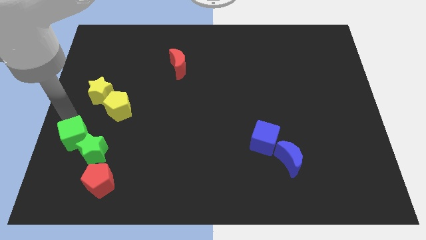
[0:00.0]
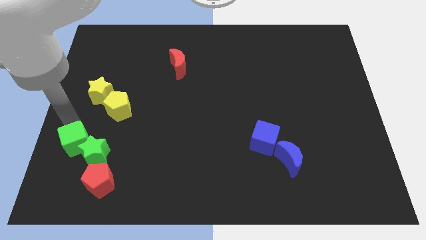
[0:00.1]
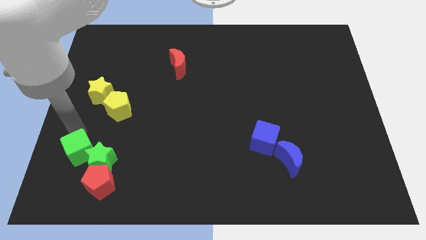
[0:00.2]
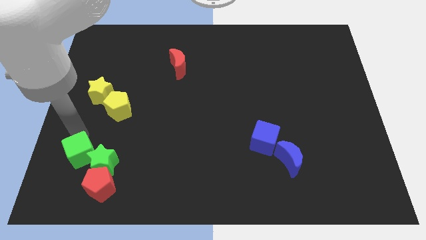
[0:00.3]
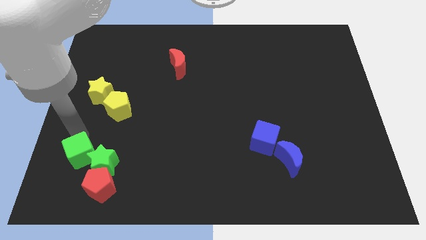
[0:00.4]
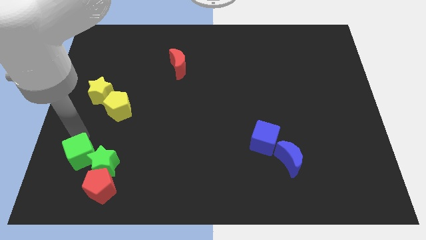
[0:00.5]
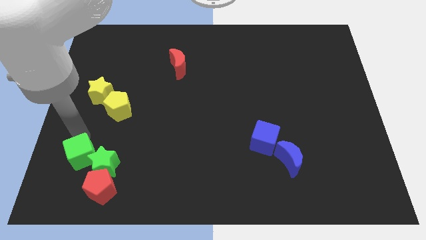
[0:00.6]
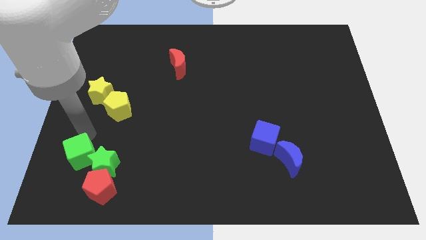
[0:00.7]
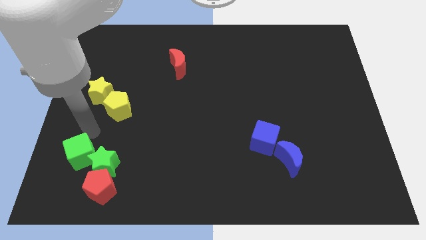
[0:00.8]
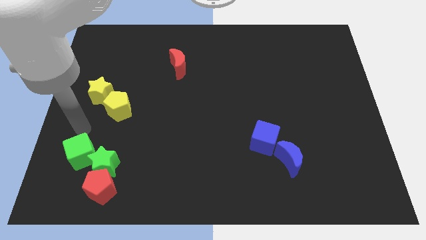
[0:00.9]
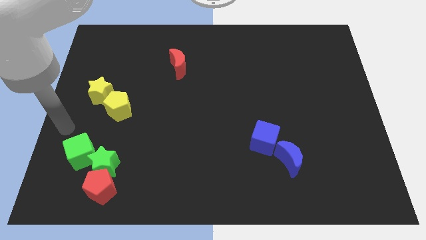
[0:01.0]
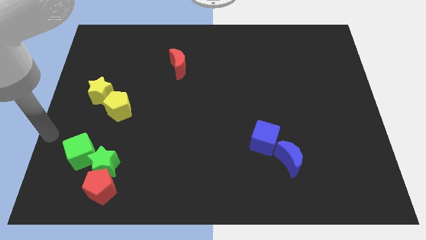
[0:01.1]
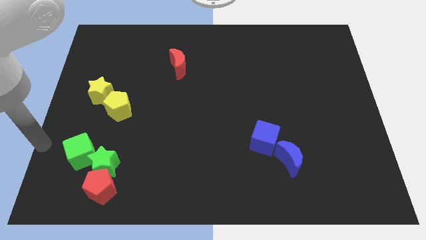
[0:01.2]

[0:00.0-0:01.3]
group up the green cube green star and red pentagon at the bottom left of the table

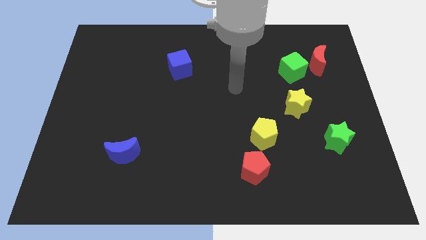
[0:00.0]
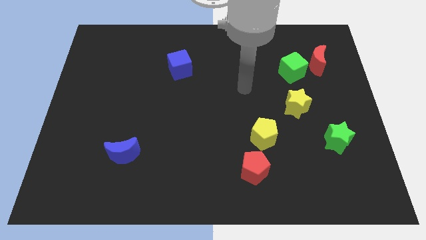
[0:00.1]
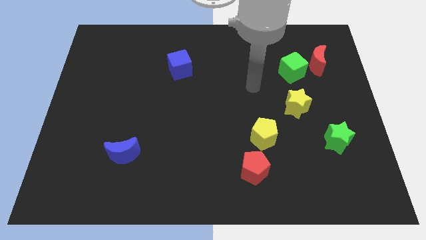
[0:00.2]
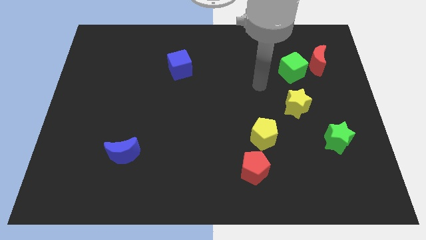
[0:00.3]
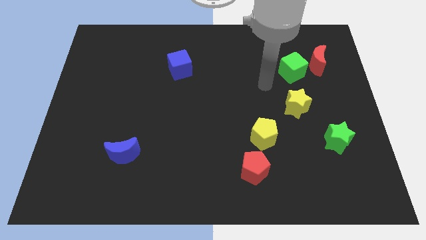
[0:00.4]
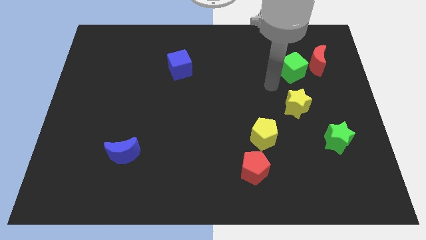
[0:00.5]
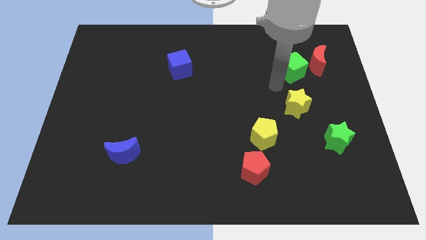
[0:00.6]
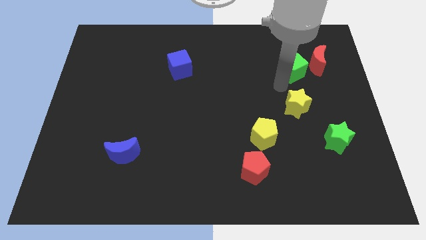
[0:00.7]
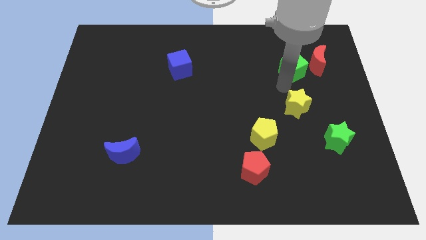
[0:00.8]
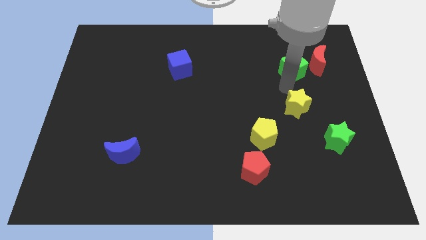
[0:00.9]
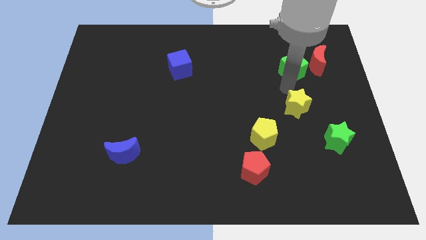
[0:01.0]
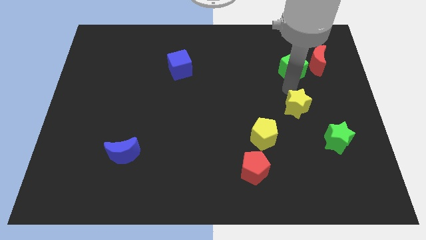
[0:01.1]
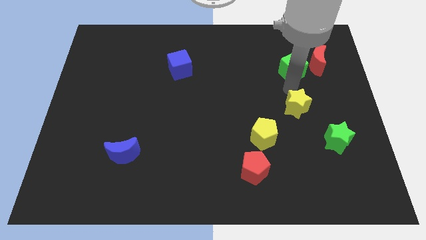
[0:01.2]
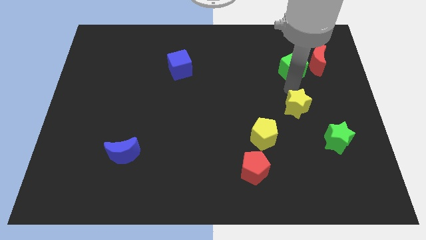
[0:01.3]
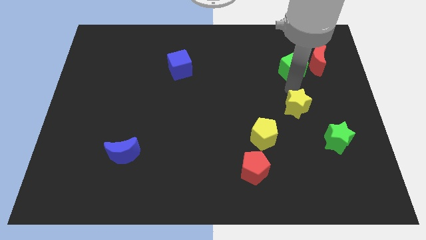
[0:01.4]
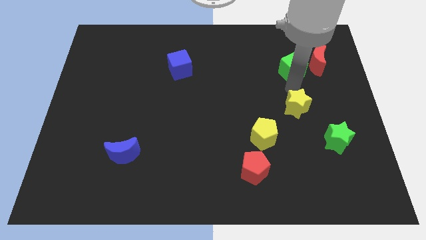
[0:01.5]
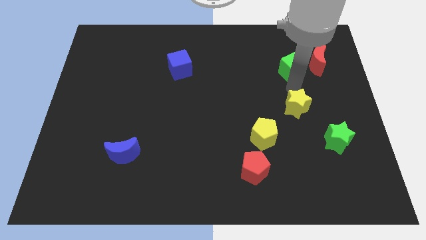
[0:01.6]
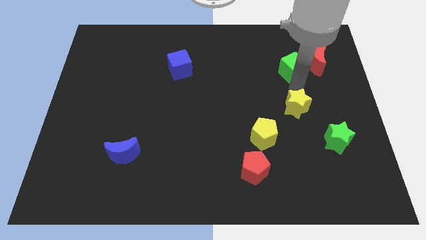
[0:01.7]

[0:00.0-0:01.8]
place your arm in between green cube and yellow star

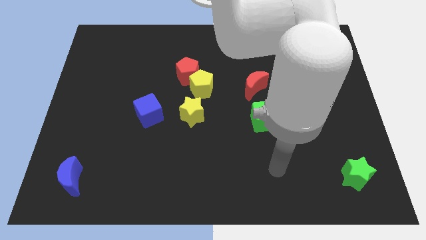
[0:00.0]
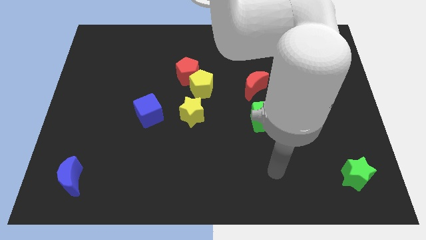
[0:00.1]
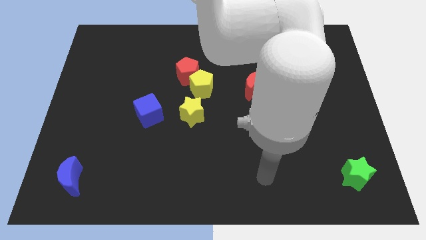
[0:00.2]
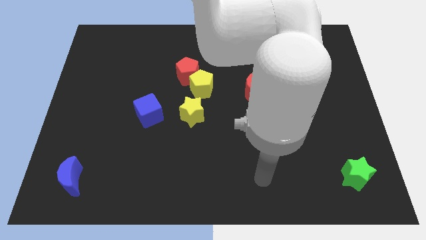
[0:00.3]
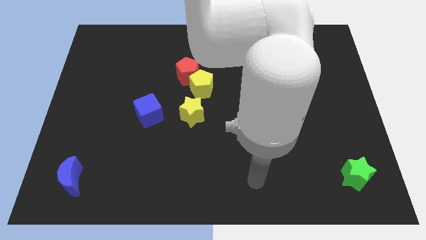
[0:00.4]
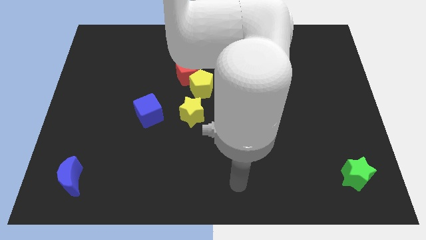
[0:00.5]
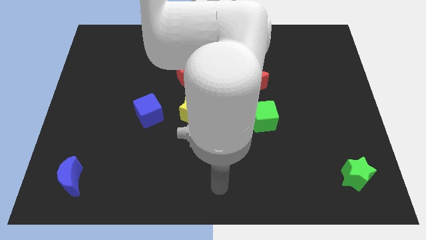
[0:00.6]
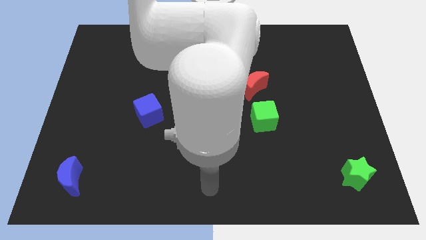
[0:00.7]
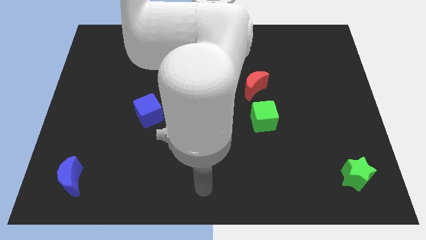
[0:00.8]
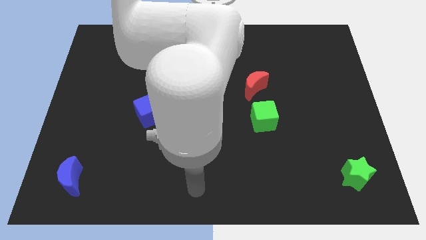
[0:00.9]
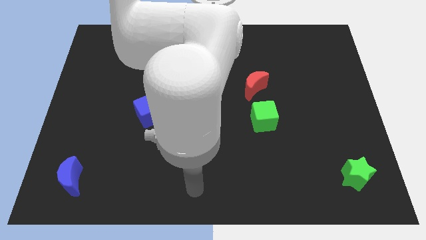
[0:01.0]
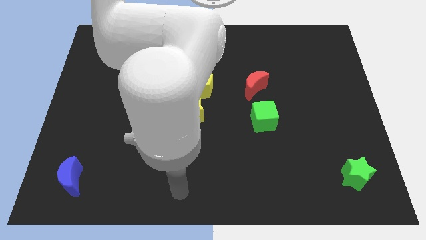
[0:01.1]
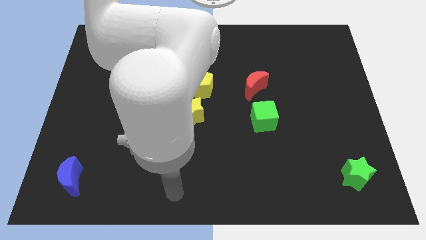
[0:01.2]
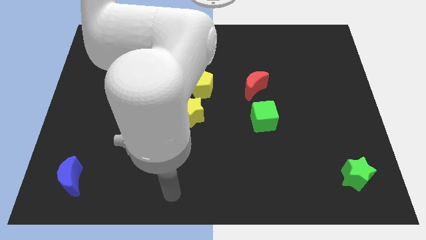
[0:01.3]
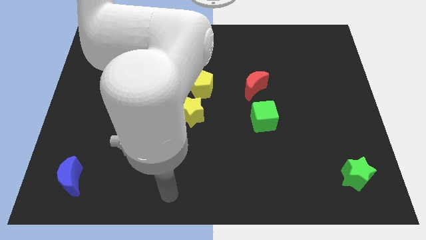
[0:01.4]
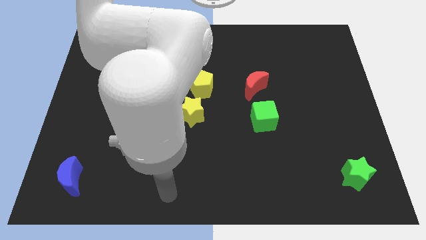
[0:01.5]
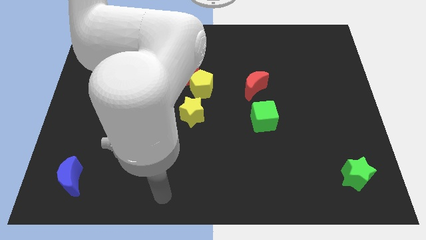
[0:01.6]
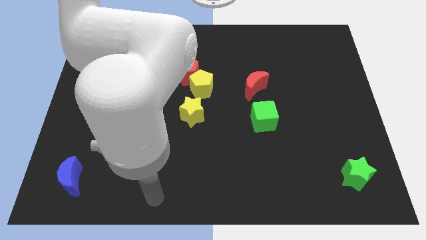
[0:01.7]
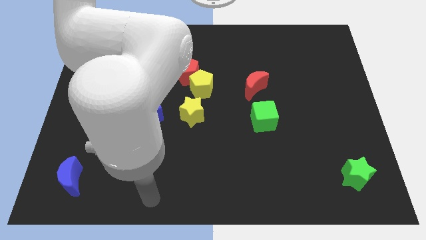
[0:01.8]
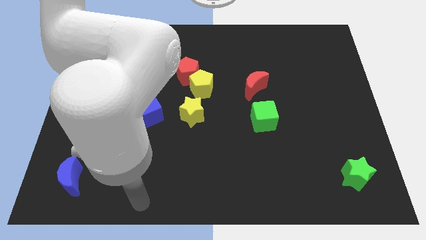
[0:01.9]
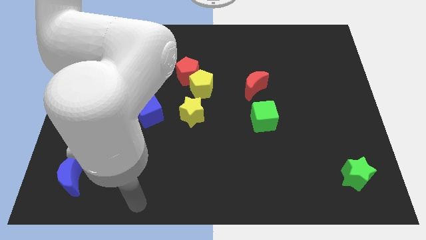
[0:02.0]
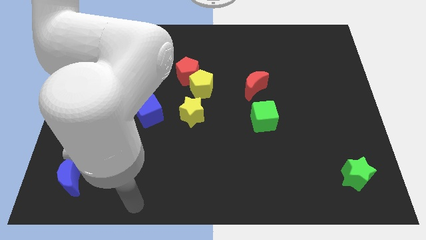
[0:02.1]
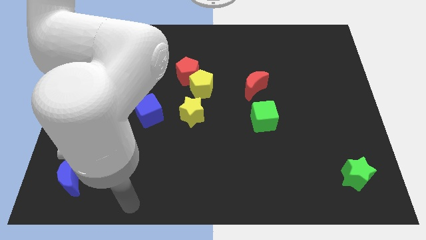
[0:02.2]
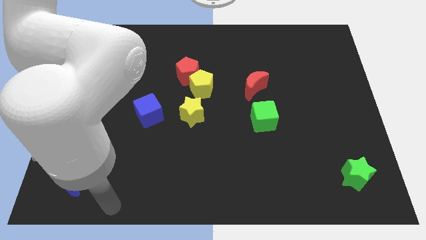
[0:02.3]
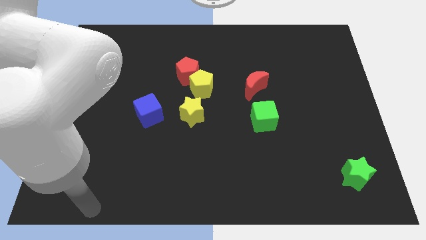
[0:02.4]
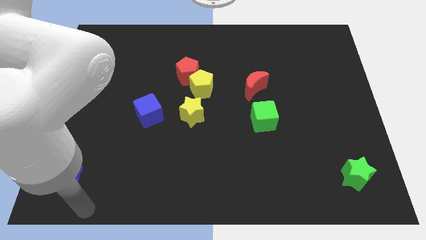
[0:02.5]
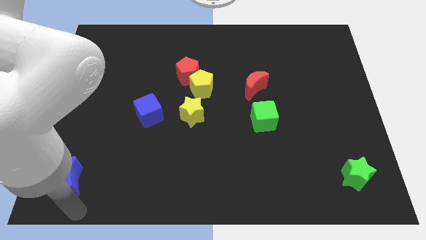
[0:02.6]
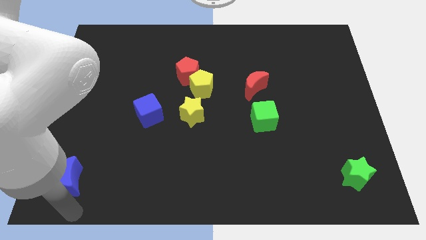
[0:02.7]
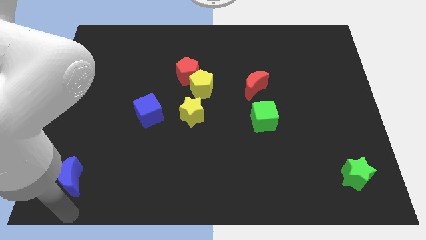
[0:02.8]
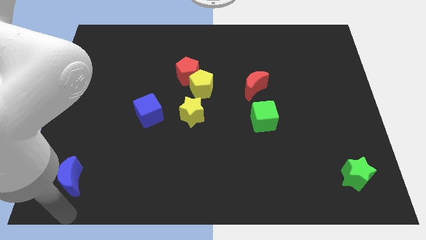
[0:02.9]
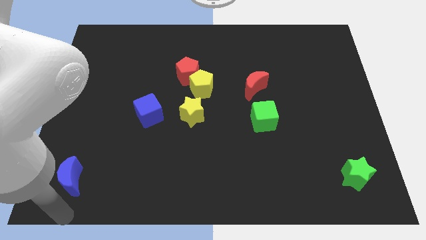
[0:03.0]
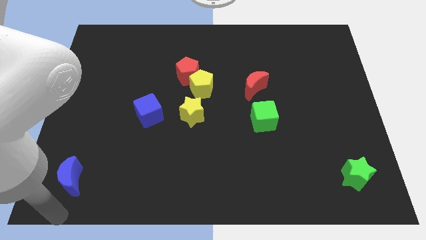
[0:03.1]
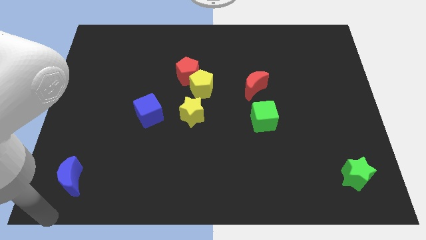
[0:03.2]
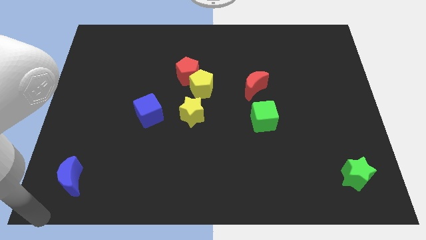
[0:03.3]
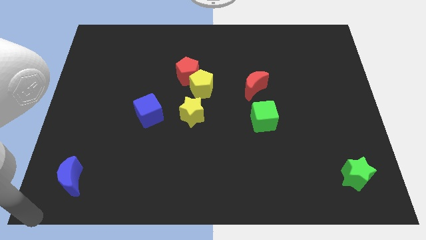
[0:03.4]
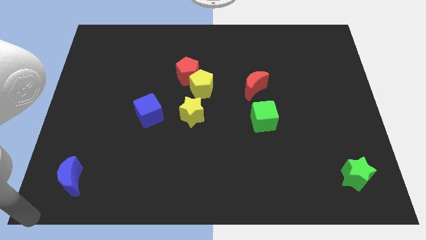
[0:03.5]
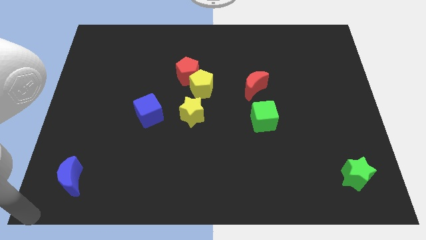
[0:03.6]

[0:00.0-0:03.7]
move the arm to the bottom left corner of board

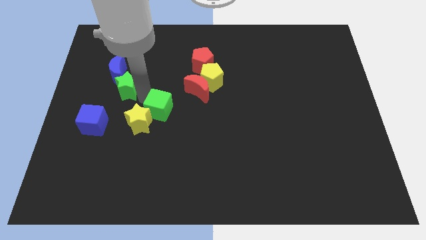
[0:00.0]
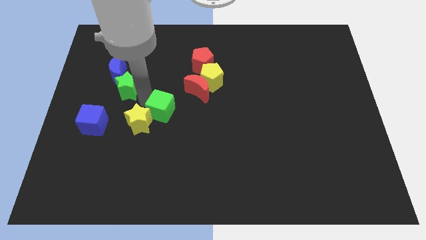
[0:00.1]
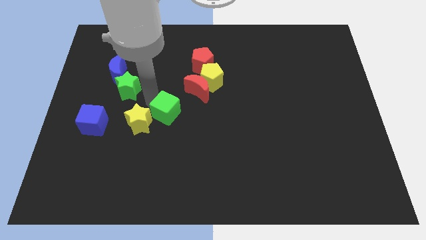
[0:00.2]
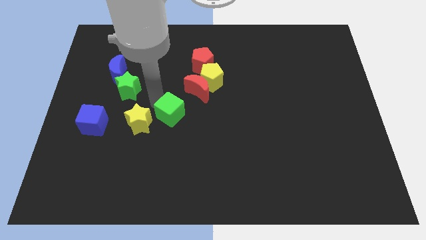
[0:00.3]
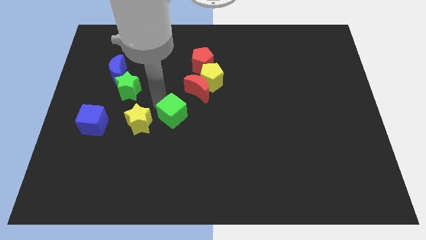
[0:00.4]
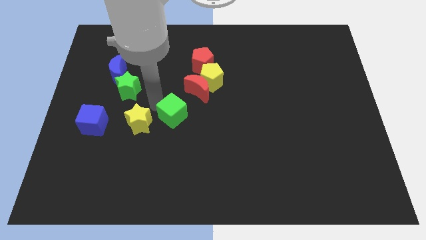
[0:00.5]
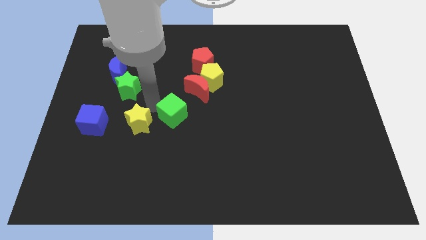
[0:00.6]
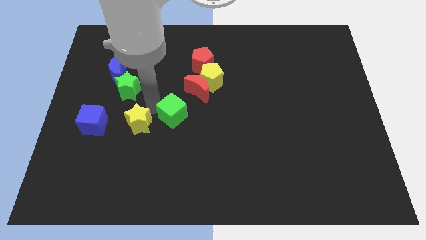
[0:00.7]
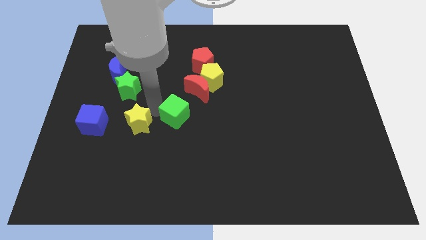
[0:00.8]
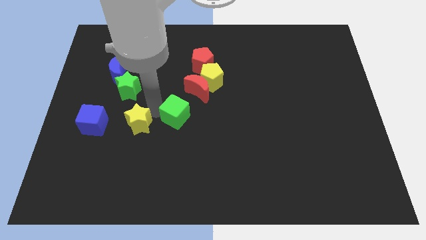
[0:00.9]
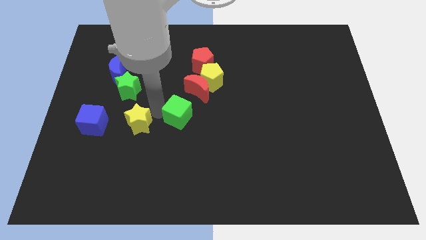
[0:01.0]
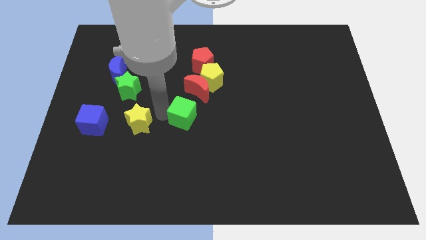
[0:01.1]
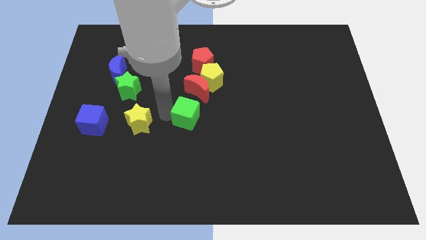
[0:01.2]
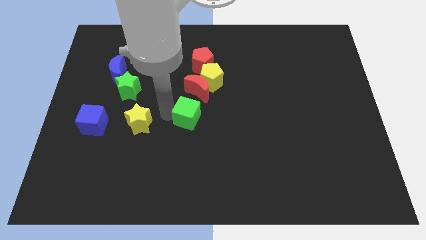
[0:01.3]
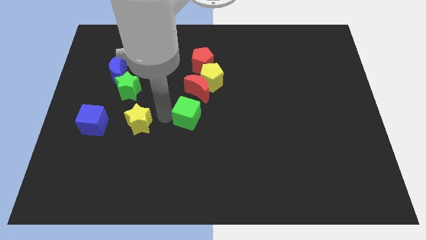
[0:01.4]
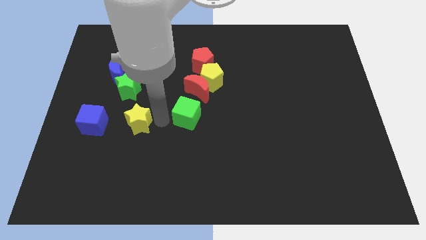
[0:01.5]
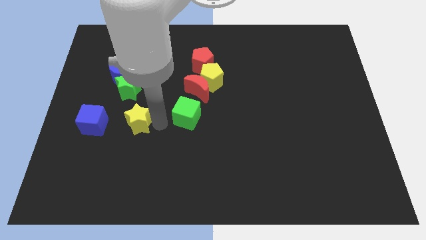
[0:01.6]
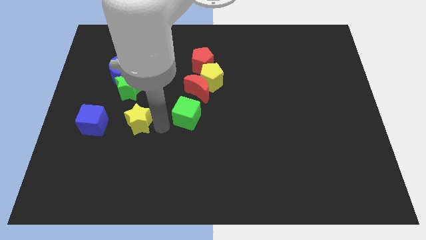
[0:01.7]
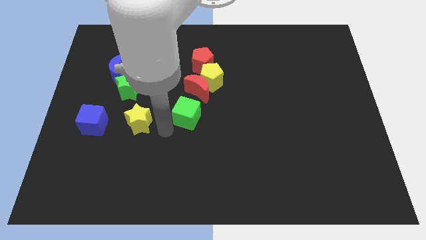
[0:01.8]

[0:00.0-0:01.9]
place the green cube underneath the red crescent

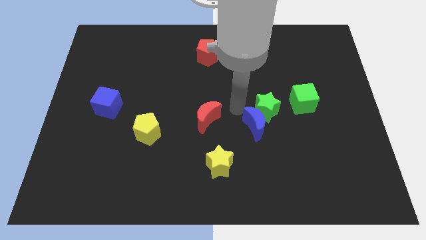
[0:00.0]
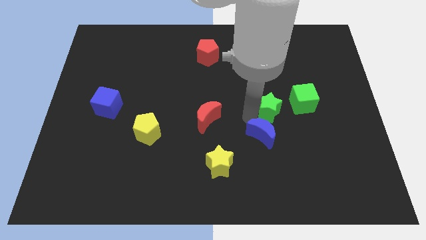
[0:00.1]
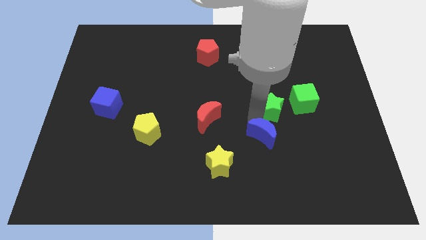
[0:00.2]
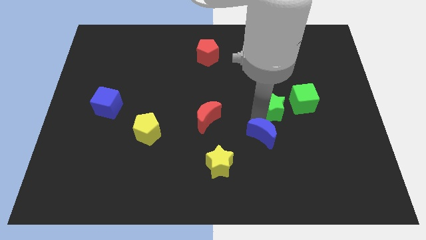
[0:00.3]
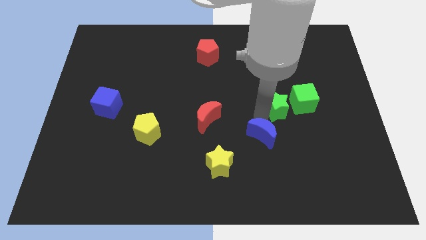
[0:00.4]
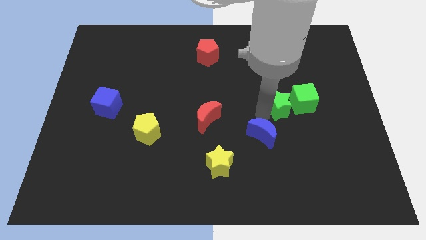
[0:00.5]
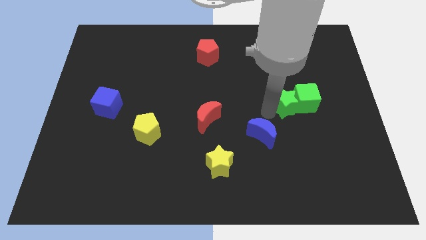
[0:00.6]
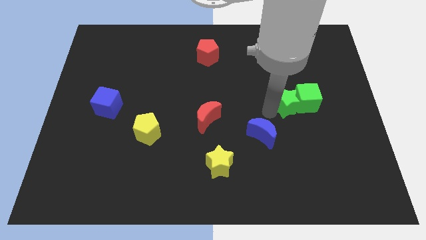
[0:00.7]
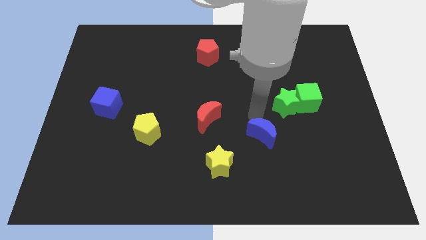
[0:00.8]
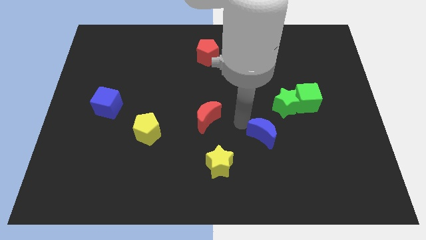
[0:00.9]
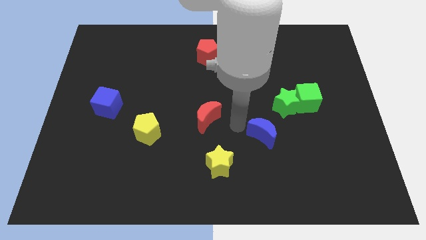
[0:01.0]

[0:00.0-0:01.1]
push the green star into the green cube
